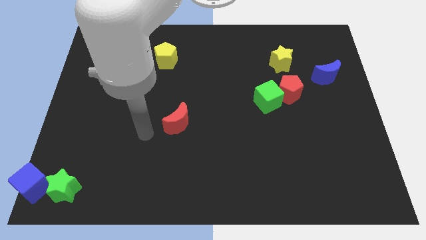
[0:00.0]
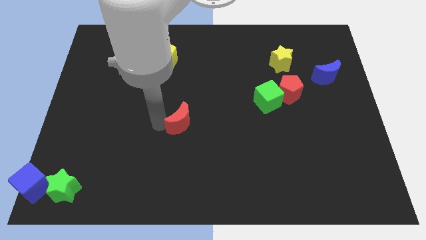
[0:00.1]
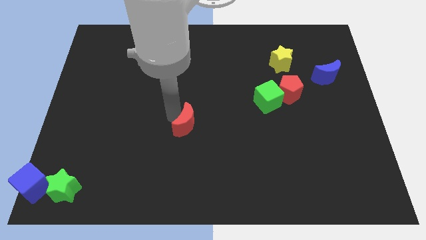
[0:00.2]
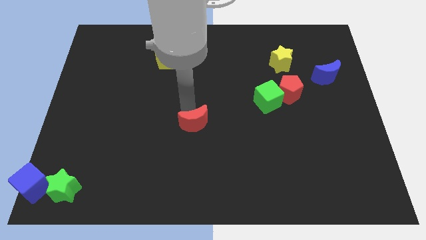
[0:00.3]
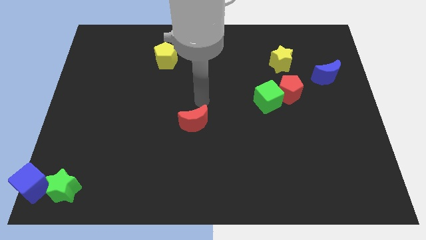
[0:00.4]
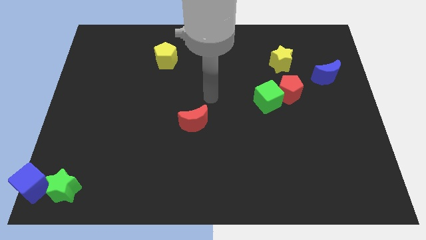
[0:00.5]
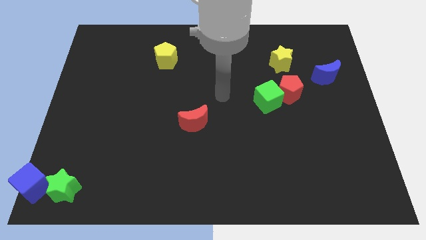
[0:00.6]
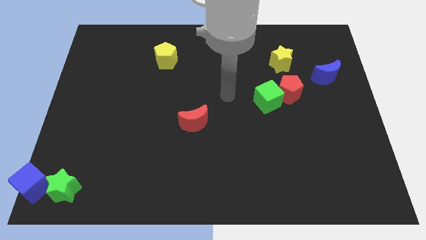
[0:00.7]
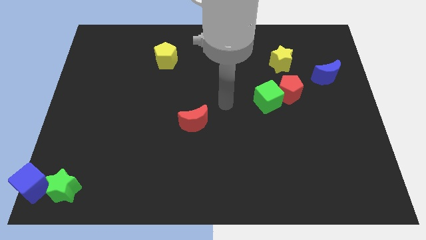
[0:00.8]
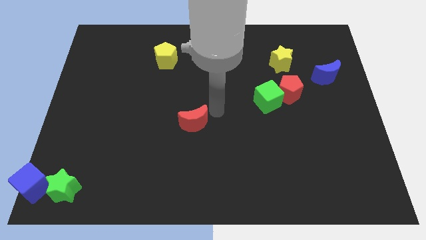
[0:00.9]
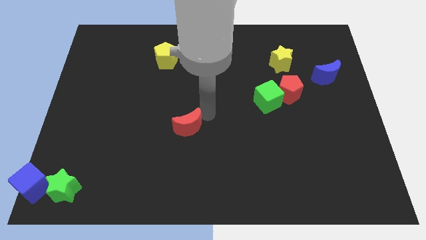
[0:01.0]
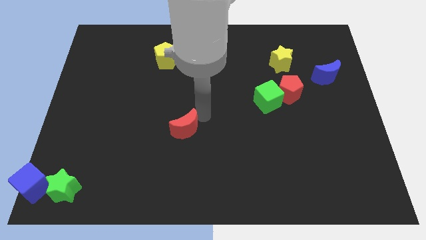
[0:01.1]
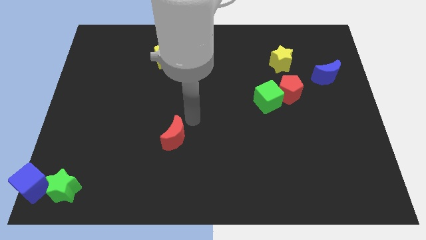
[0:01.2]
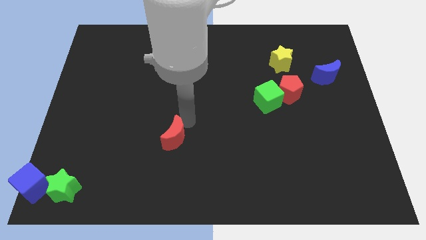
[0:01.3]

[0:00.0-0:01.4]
slide the red moon towards the green star

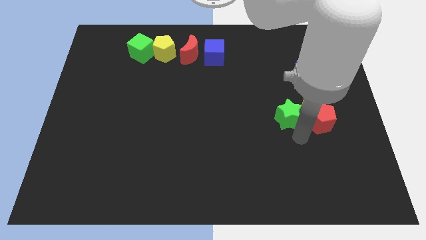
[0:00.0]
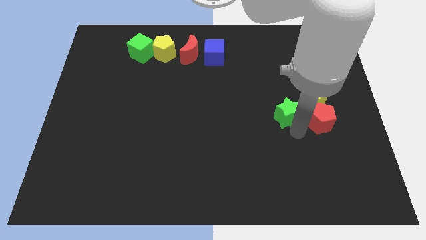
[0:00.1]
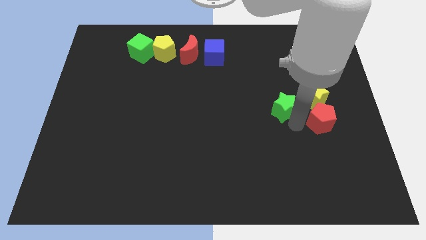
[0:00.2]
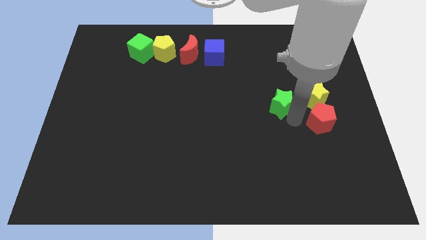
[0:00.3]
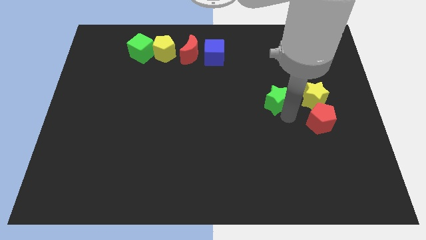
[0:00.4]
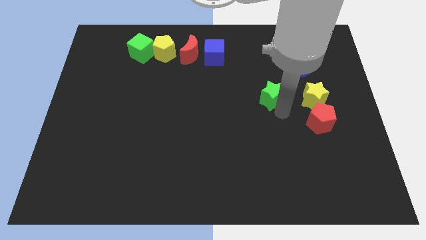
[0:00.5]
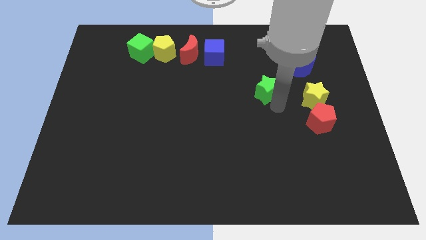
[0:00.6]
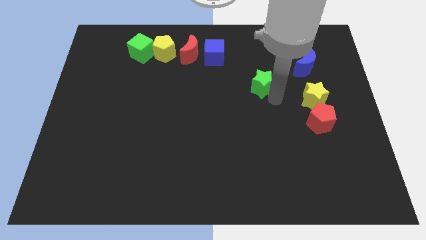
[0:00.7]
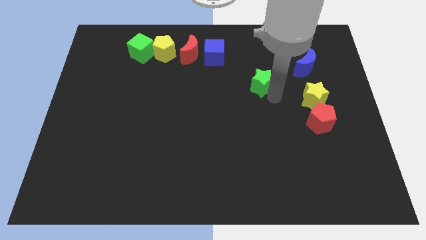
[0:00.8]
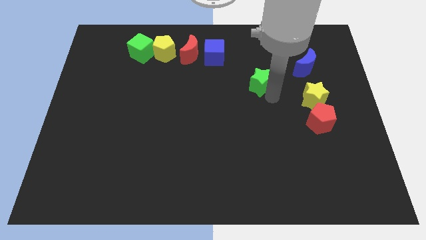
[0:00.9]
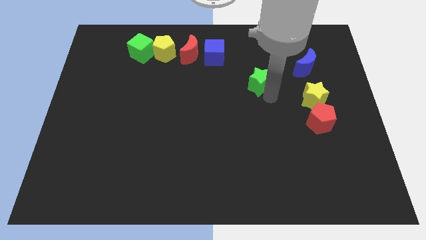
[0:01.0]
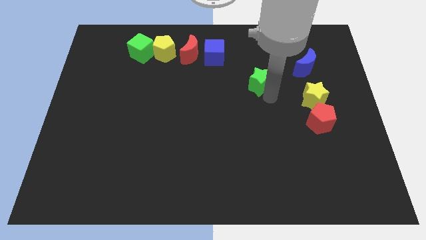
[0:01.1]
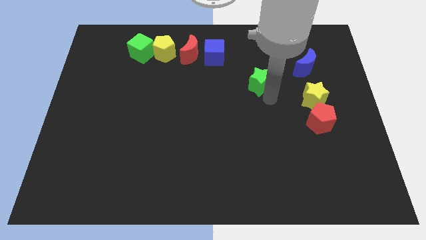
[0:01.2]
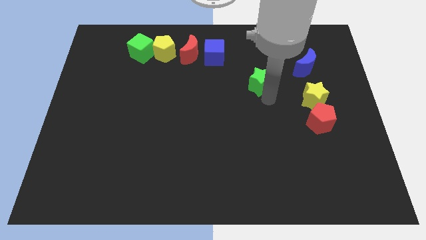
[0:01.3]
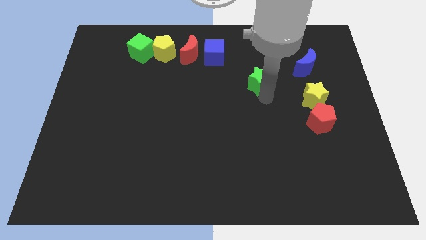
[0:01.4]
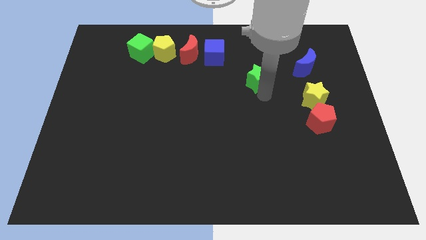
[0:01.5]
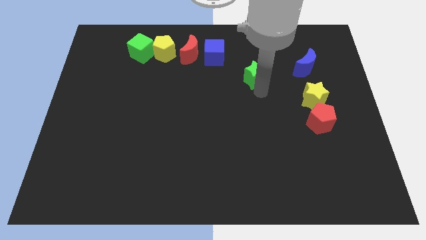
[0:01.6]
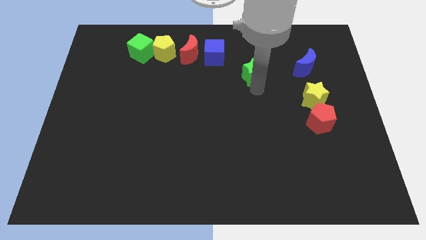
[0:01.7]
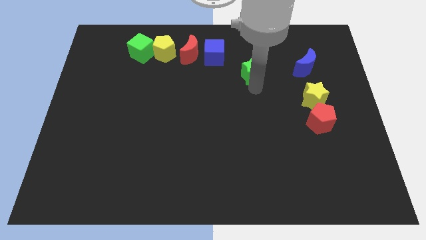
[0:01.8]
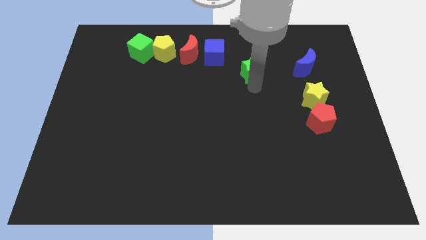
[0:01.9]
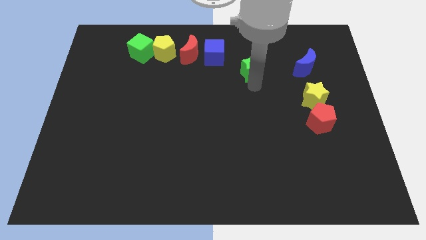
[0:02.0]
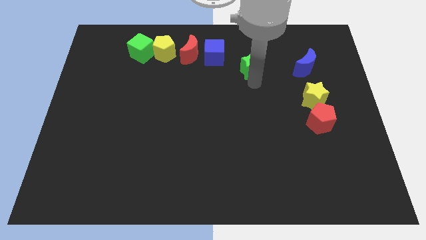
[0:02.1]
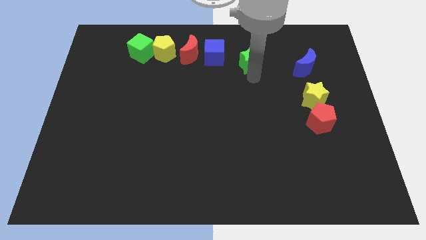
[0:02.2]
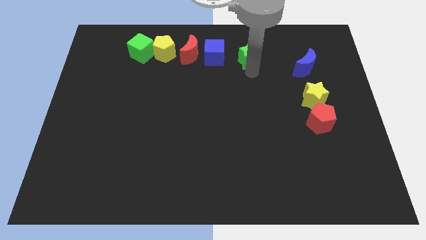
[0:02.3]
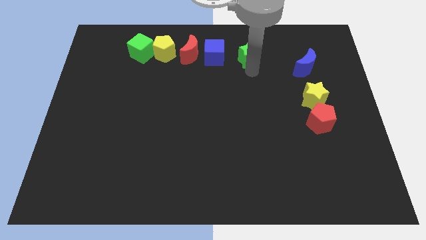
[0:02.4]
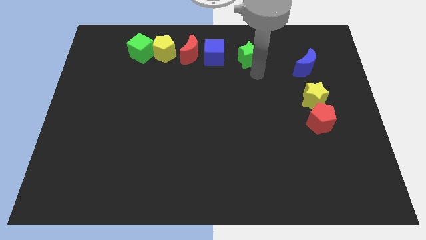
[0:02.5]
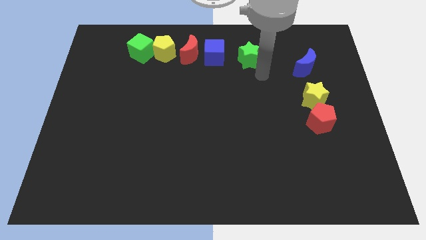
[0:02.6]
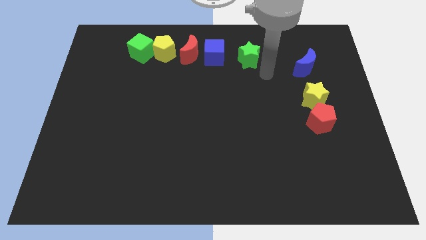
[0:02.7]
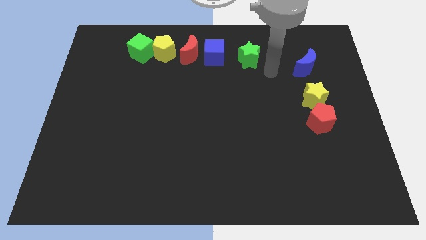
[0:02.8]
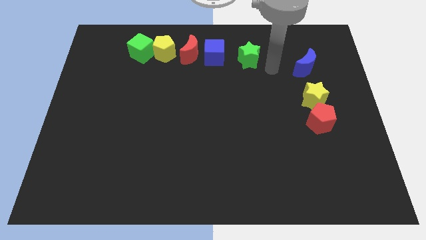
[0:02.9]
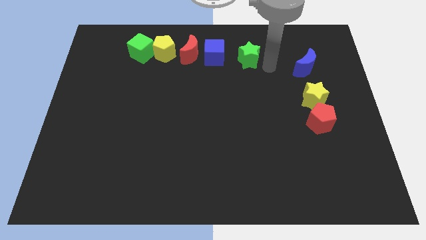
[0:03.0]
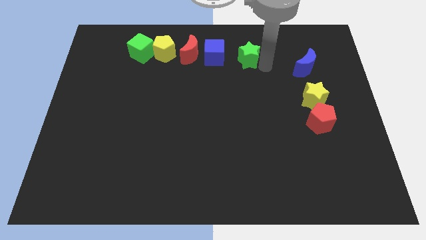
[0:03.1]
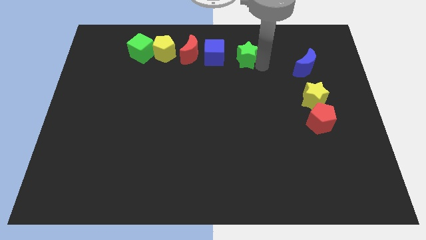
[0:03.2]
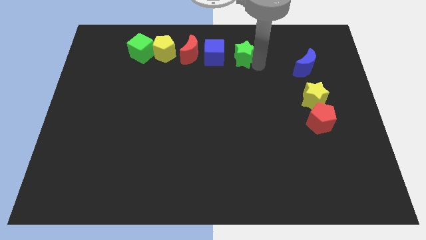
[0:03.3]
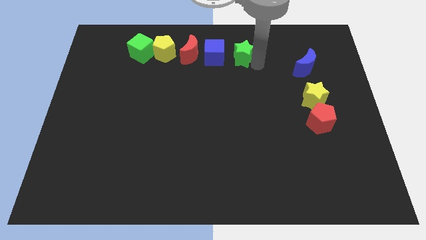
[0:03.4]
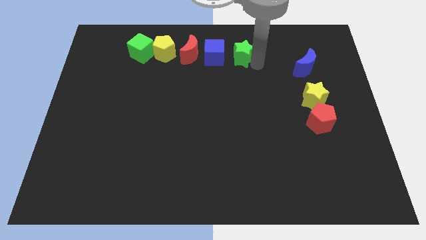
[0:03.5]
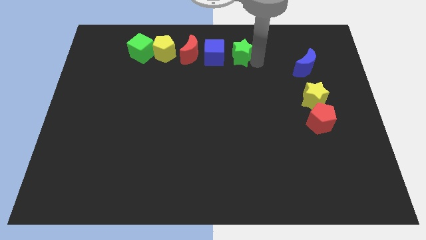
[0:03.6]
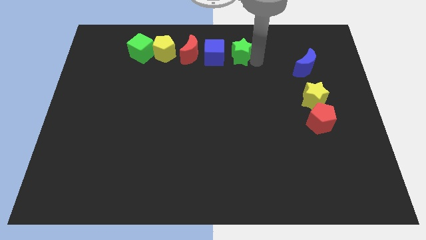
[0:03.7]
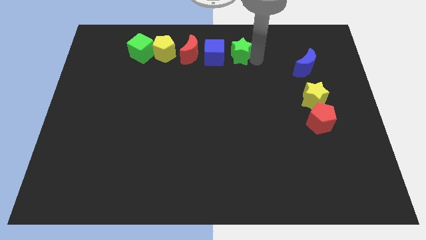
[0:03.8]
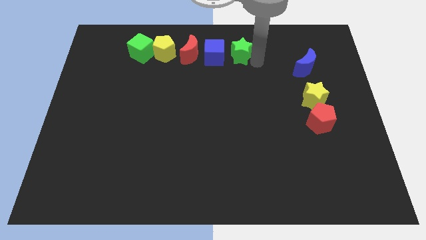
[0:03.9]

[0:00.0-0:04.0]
place the green star to the right of the blue cube

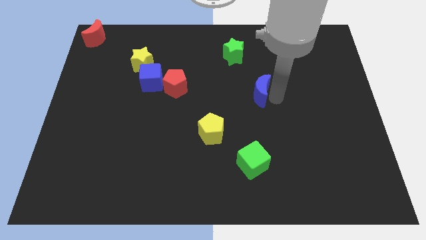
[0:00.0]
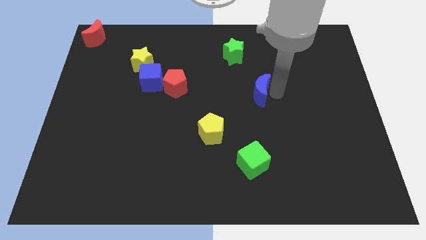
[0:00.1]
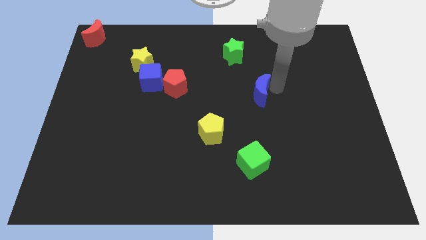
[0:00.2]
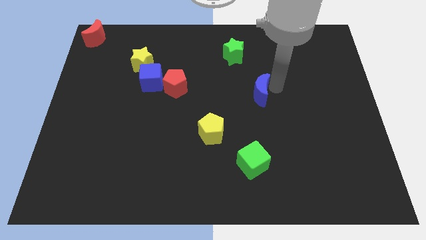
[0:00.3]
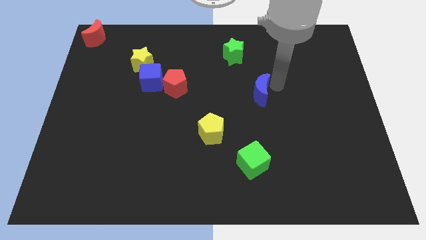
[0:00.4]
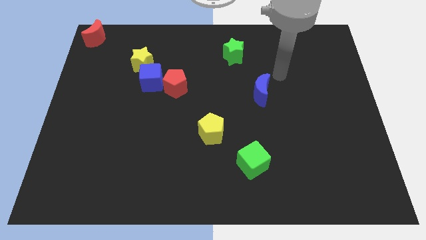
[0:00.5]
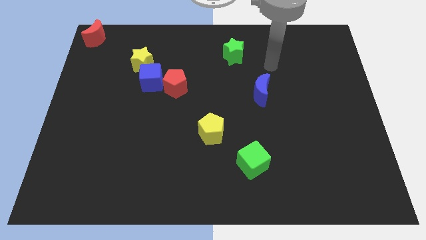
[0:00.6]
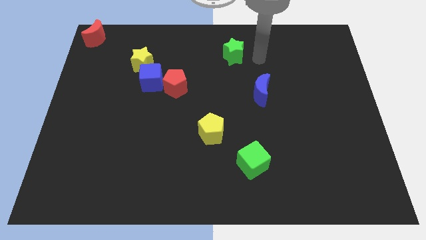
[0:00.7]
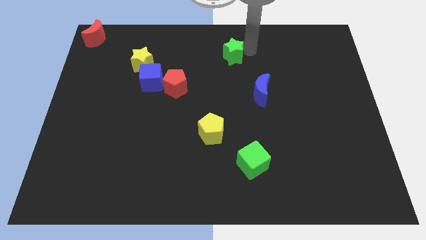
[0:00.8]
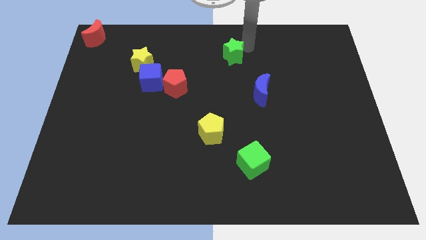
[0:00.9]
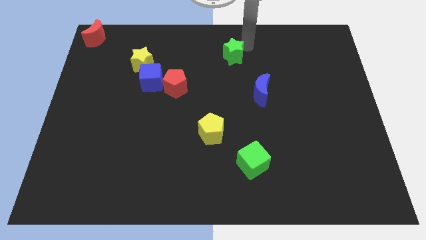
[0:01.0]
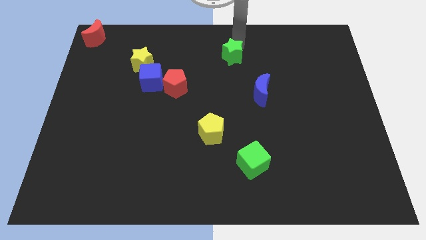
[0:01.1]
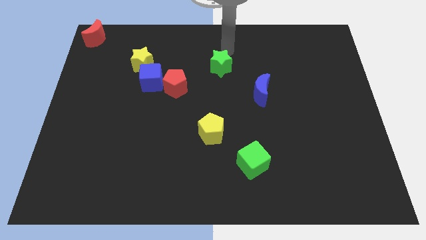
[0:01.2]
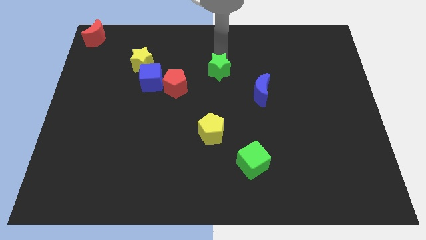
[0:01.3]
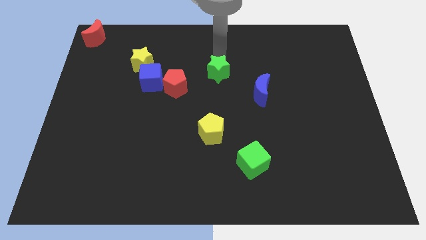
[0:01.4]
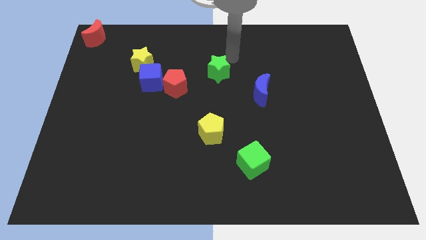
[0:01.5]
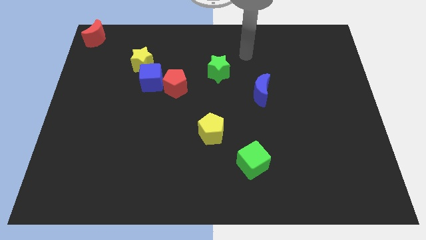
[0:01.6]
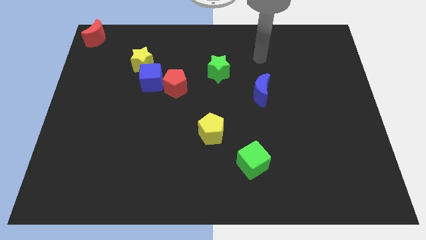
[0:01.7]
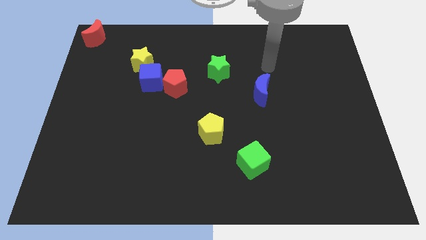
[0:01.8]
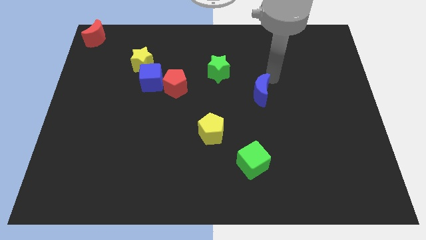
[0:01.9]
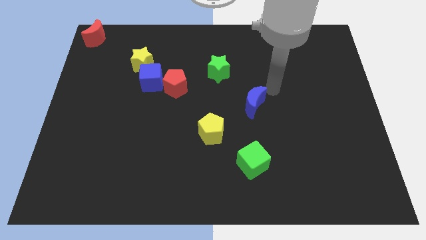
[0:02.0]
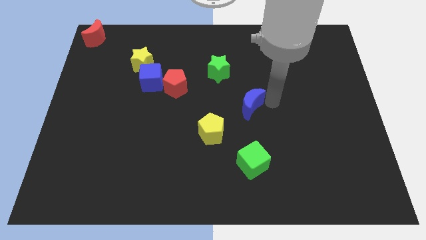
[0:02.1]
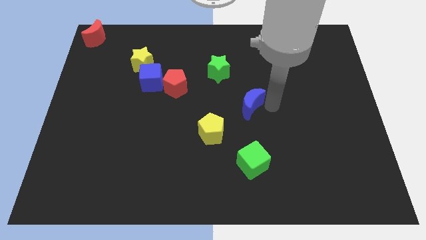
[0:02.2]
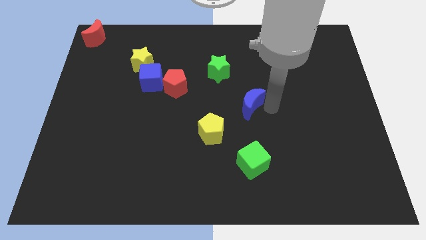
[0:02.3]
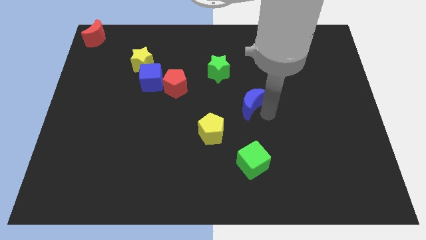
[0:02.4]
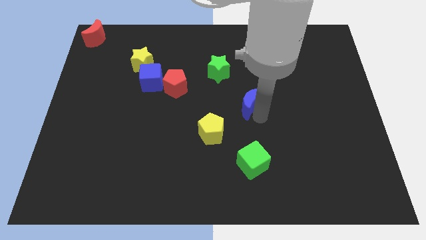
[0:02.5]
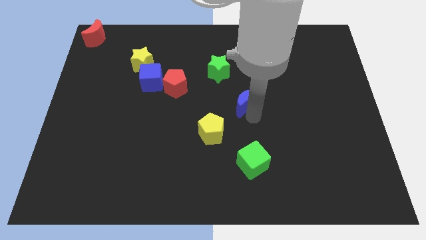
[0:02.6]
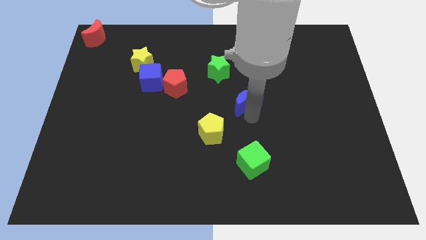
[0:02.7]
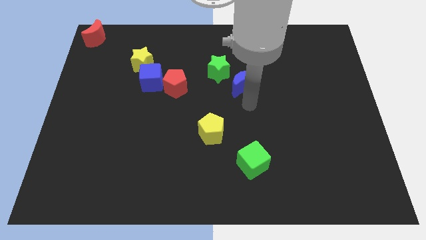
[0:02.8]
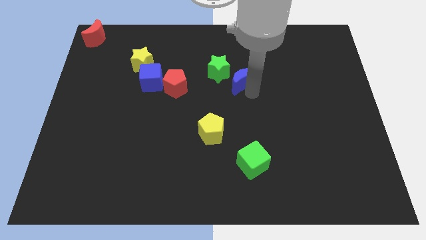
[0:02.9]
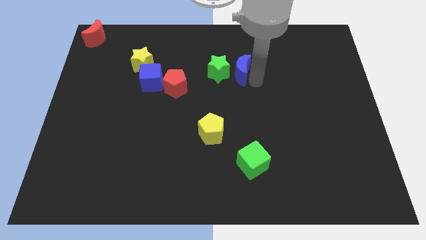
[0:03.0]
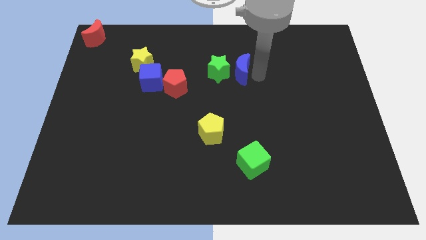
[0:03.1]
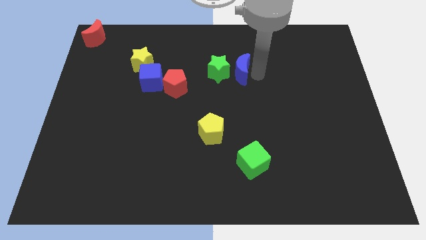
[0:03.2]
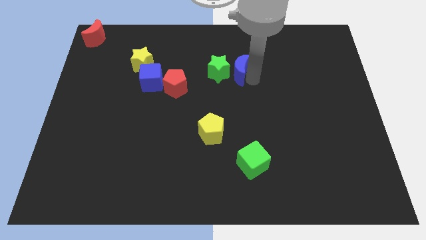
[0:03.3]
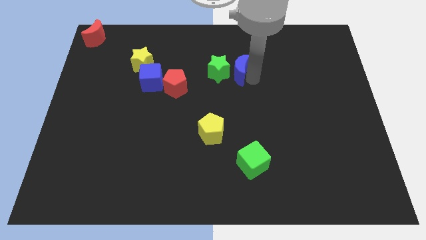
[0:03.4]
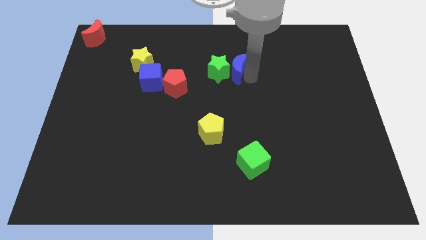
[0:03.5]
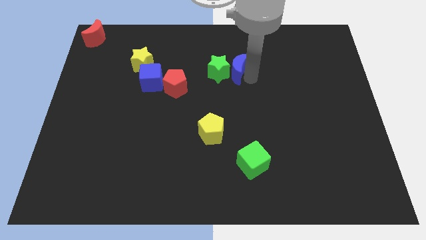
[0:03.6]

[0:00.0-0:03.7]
push blue crescent beside green star
